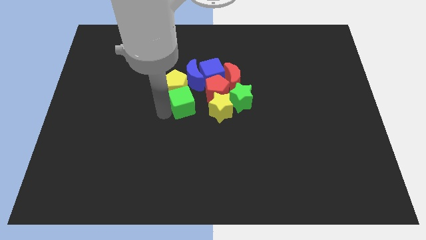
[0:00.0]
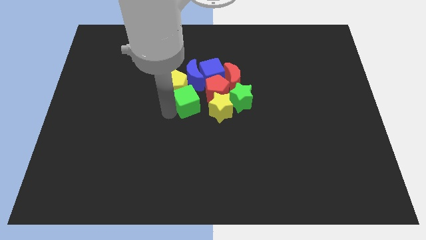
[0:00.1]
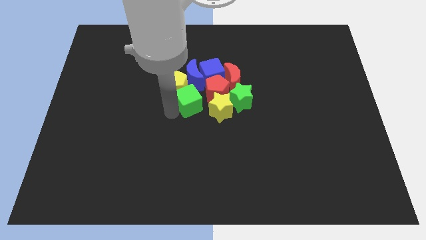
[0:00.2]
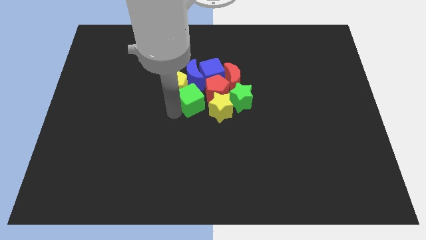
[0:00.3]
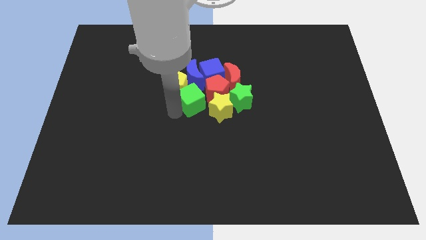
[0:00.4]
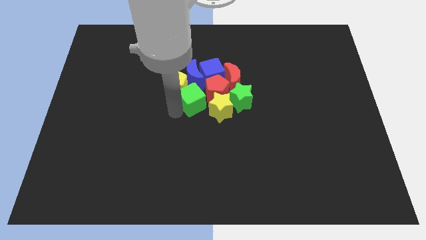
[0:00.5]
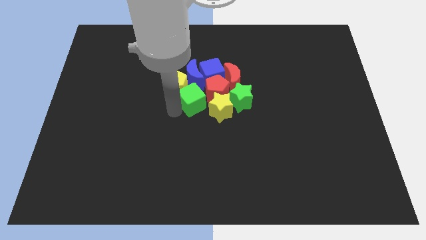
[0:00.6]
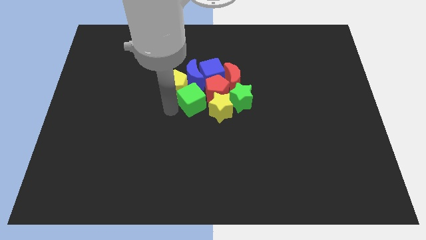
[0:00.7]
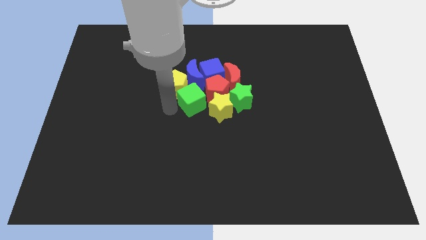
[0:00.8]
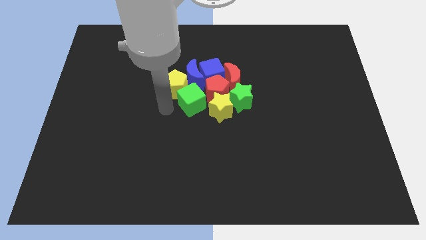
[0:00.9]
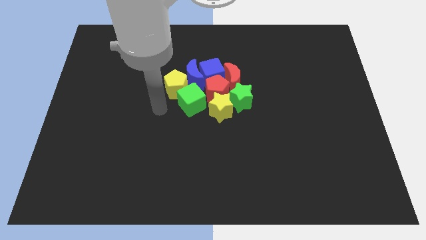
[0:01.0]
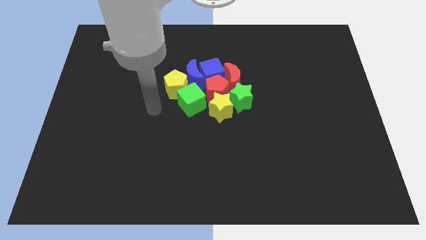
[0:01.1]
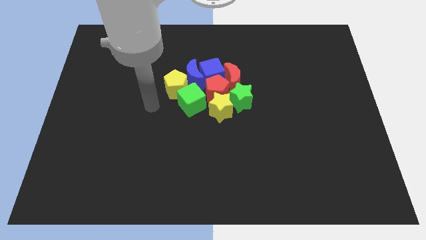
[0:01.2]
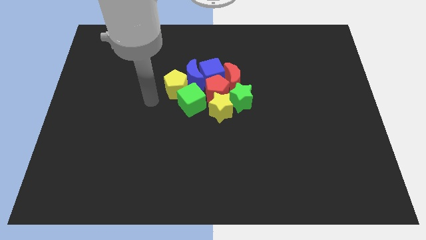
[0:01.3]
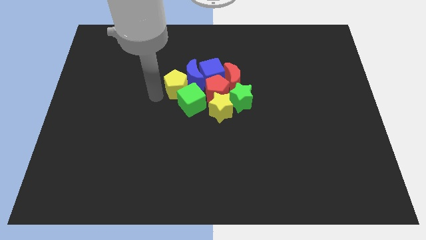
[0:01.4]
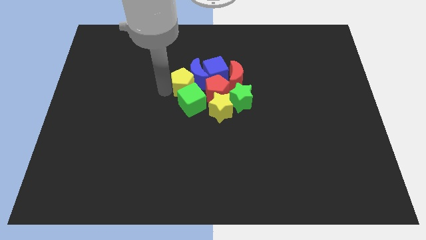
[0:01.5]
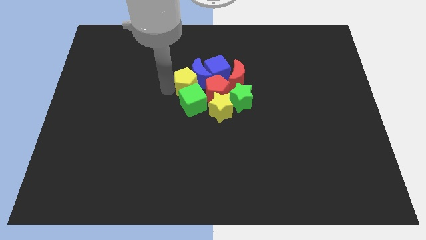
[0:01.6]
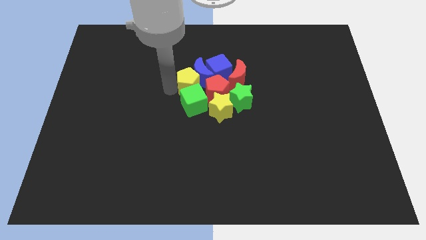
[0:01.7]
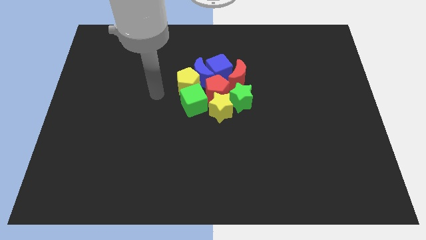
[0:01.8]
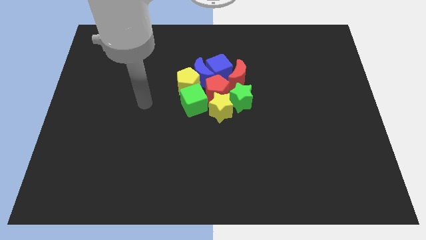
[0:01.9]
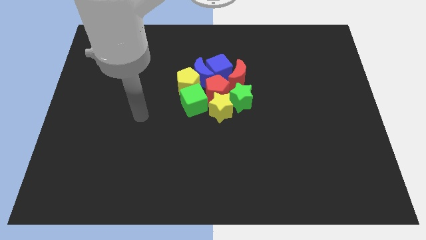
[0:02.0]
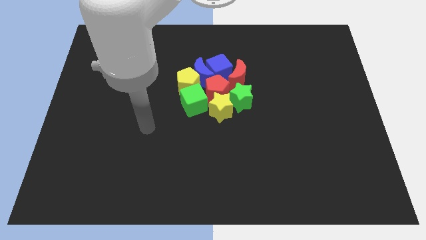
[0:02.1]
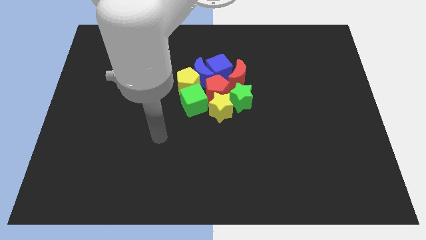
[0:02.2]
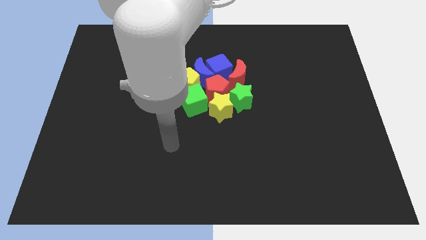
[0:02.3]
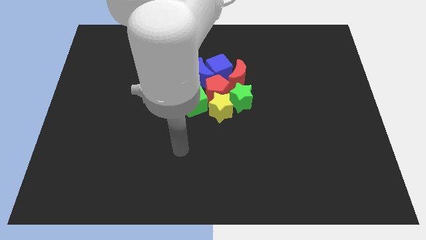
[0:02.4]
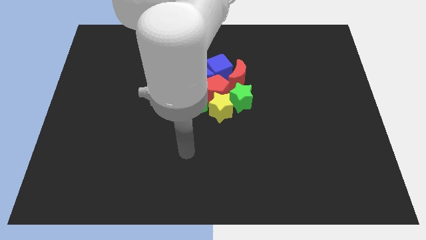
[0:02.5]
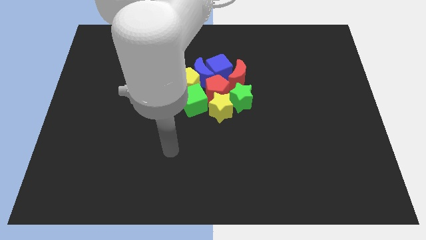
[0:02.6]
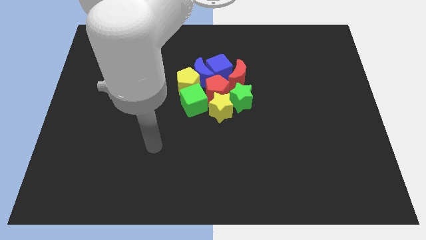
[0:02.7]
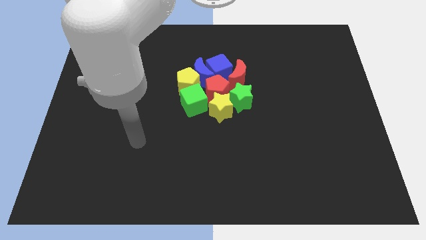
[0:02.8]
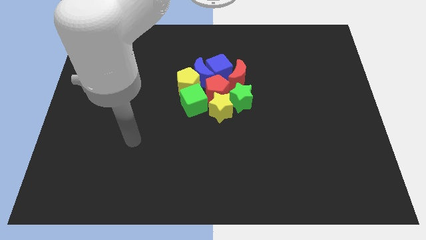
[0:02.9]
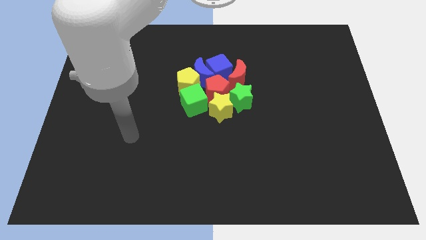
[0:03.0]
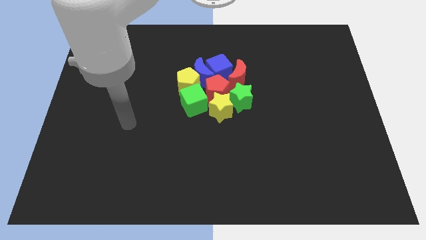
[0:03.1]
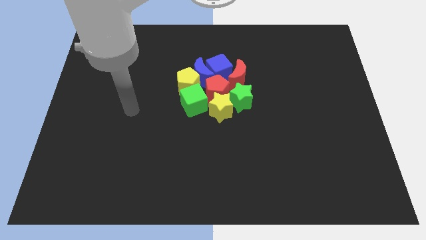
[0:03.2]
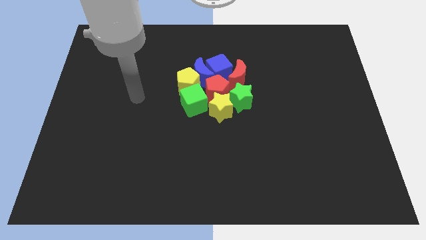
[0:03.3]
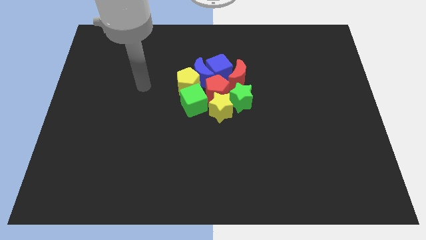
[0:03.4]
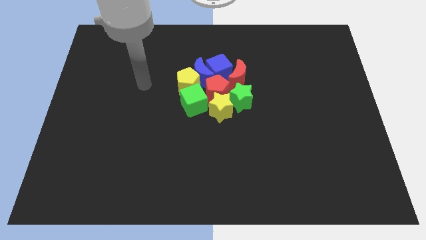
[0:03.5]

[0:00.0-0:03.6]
make all the blocks touch

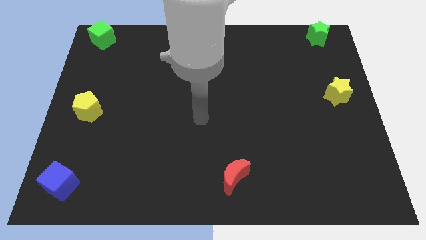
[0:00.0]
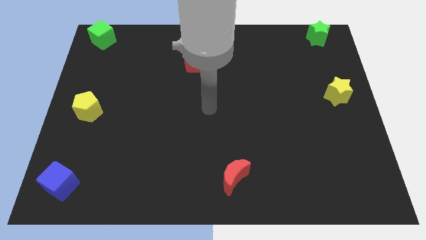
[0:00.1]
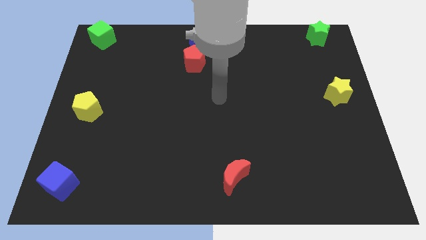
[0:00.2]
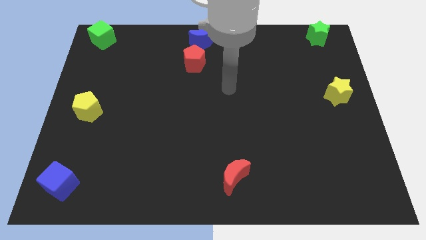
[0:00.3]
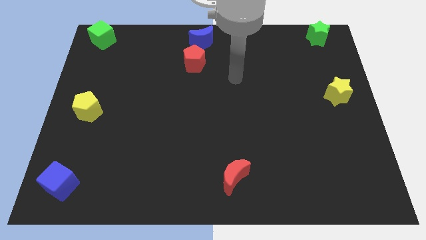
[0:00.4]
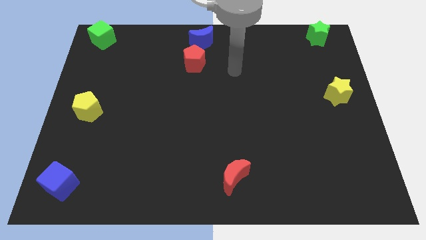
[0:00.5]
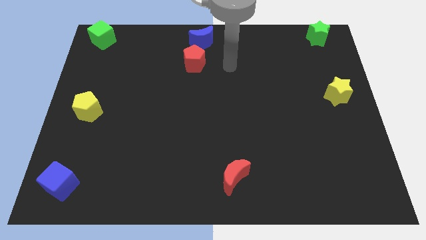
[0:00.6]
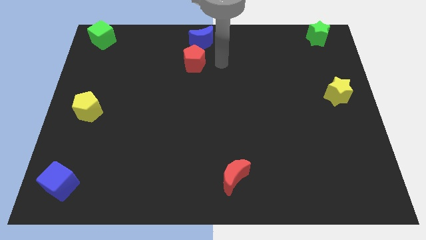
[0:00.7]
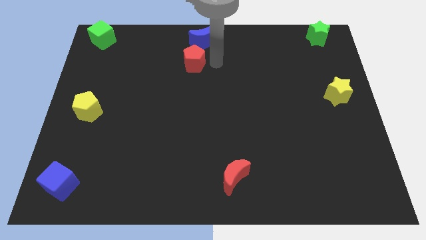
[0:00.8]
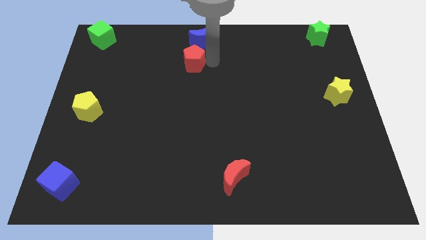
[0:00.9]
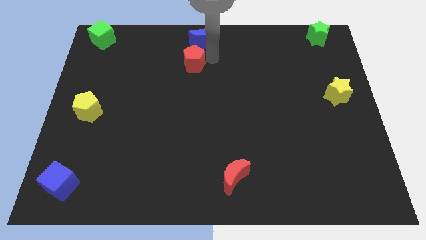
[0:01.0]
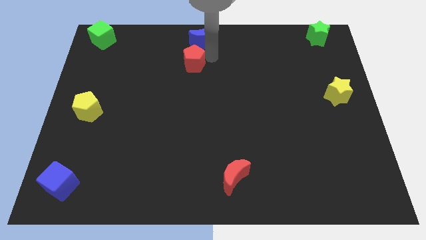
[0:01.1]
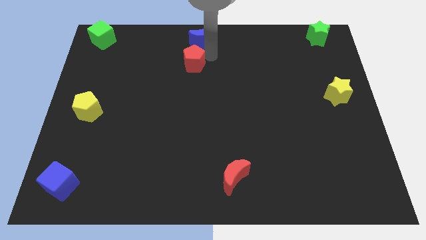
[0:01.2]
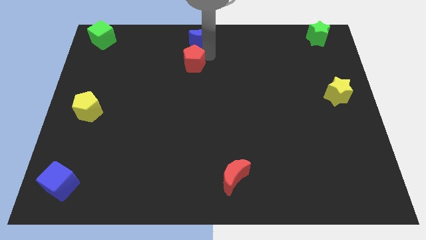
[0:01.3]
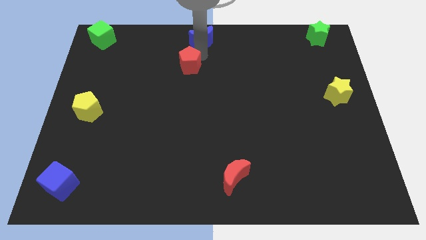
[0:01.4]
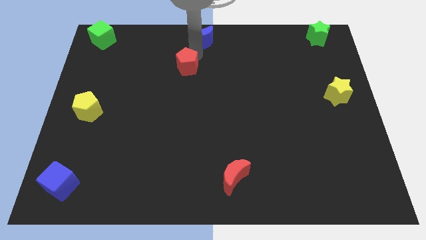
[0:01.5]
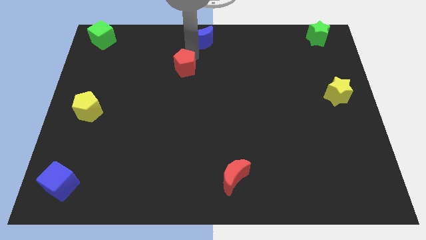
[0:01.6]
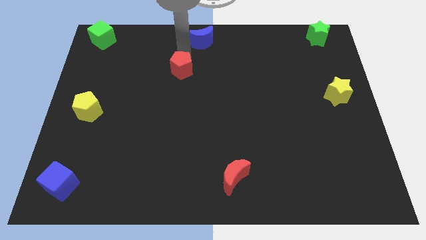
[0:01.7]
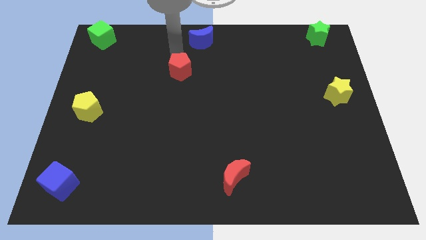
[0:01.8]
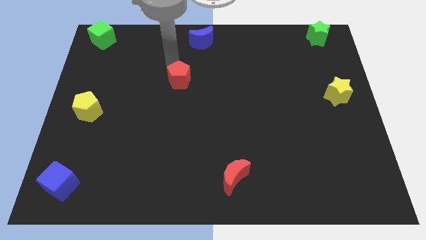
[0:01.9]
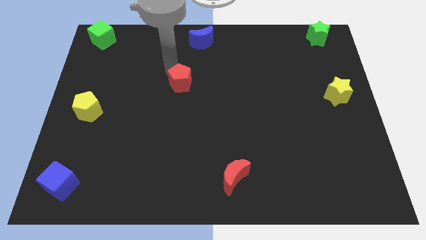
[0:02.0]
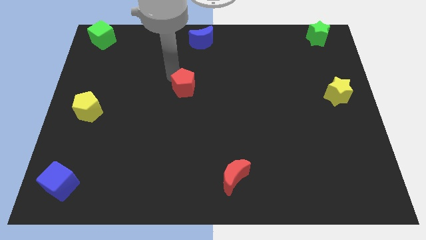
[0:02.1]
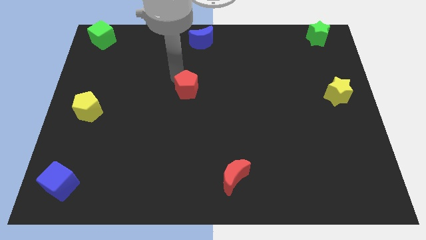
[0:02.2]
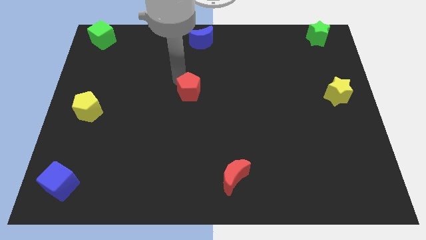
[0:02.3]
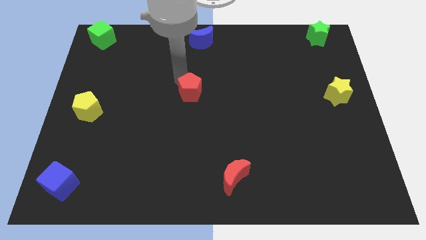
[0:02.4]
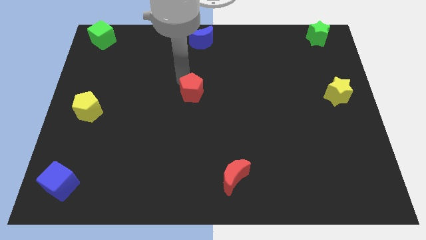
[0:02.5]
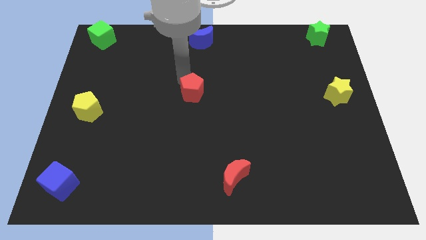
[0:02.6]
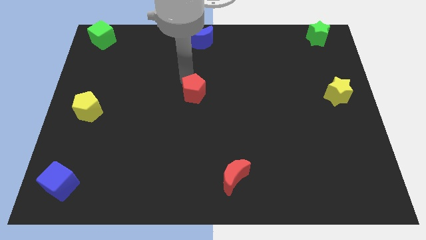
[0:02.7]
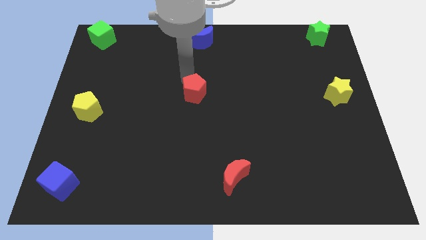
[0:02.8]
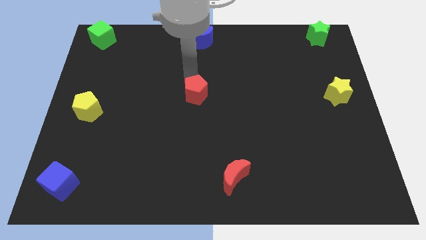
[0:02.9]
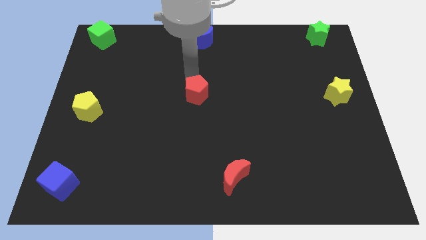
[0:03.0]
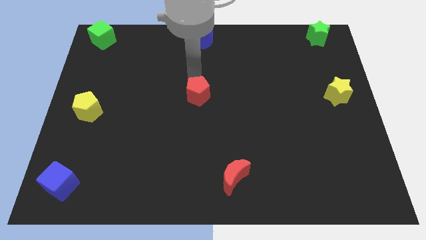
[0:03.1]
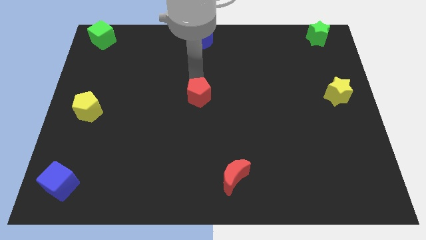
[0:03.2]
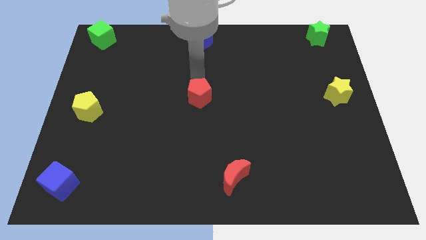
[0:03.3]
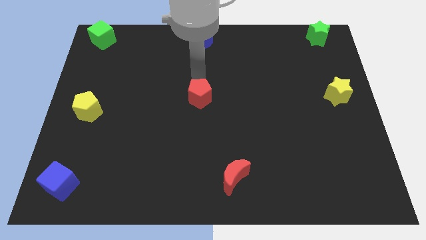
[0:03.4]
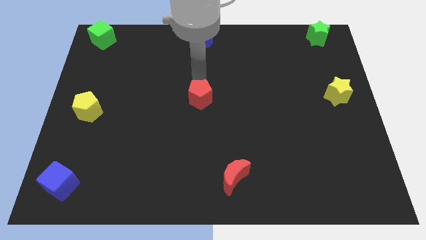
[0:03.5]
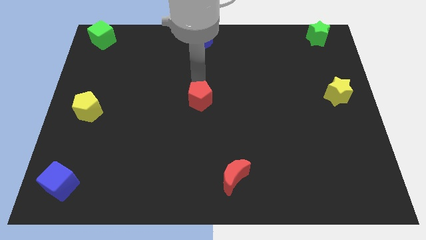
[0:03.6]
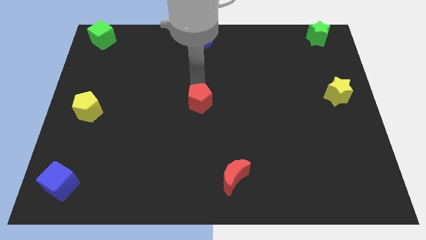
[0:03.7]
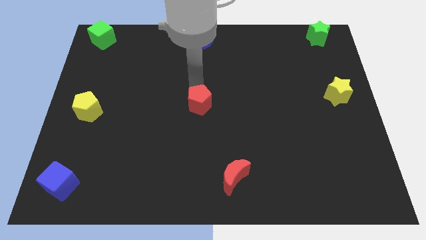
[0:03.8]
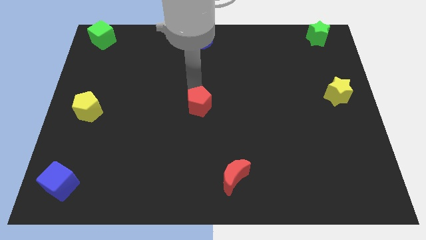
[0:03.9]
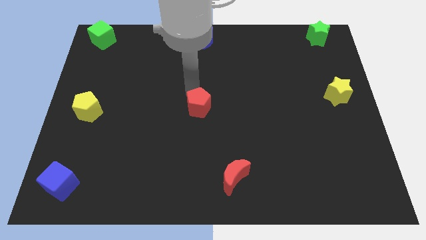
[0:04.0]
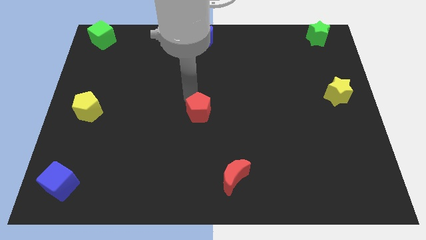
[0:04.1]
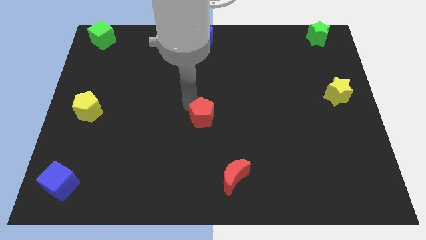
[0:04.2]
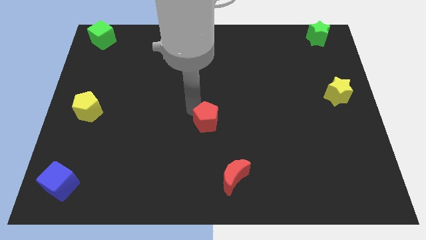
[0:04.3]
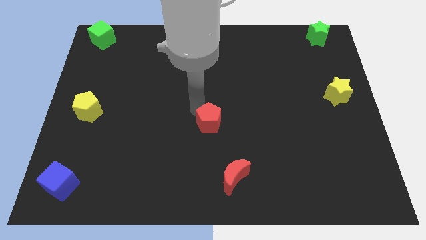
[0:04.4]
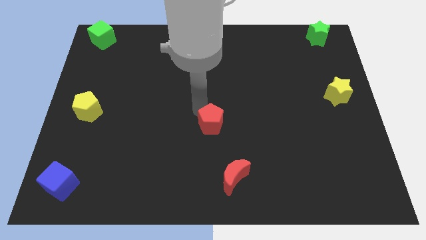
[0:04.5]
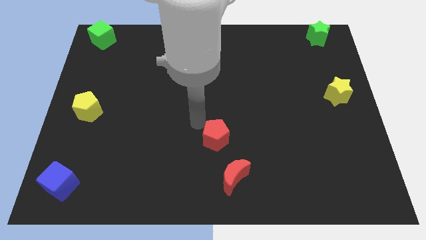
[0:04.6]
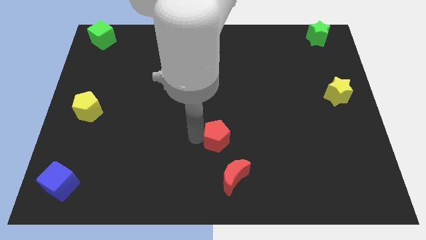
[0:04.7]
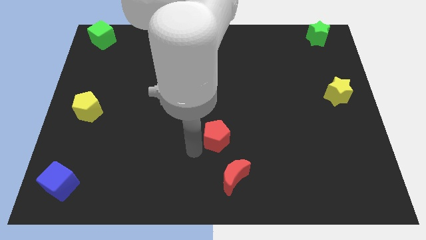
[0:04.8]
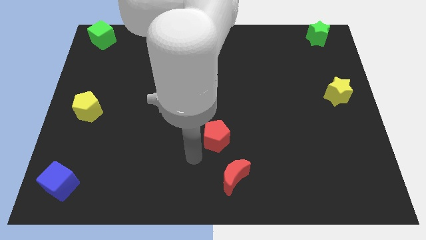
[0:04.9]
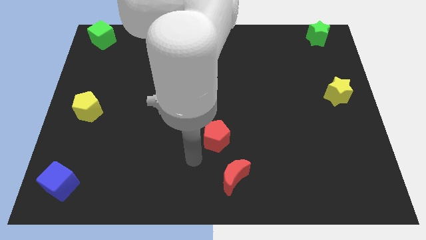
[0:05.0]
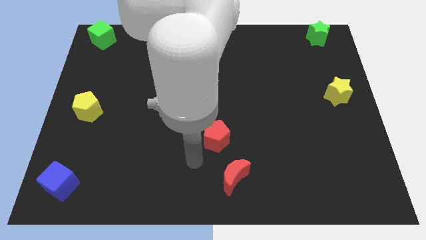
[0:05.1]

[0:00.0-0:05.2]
push the red pentagon towards the bottom side

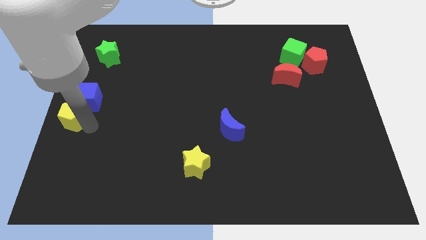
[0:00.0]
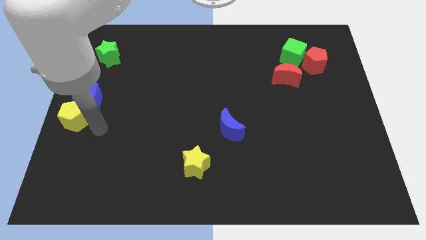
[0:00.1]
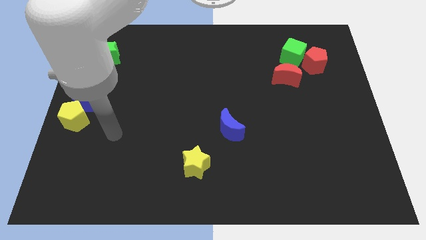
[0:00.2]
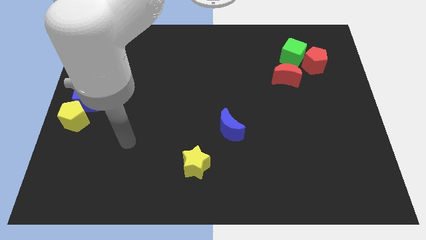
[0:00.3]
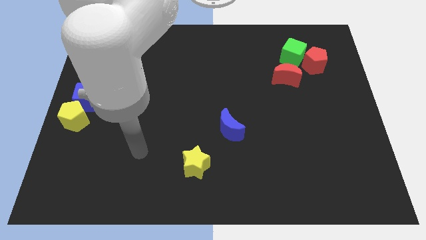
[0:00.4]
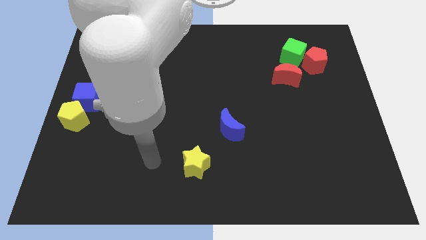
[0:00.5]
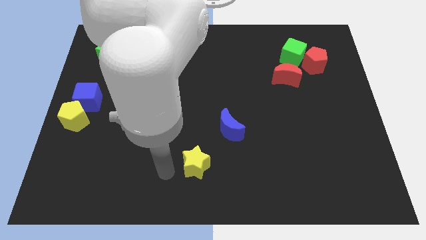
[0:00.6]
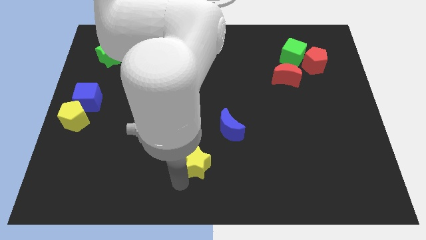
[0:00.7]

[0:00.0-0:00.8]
touch the bottom left of the yellow star
